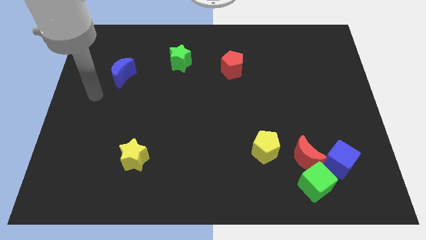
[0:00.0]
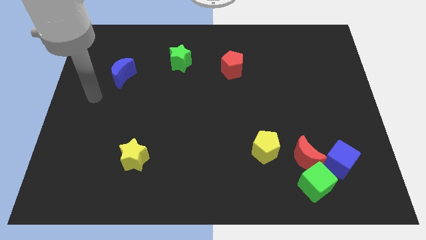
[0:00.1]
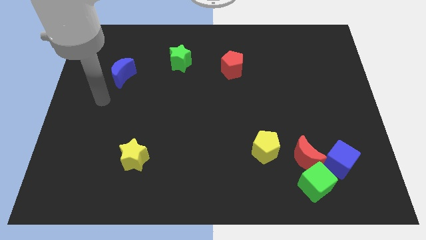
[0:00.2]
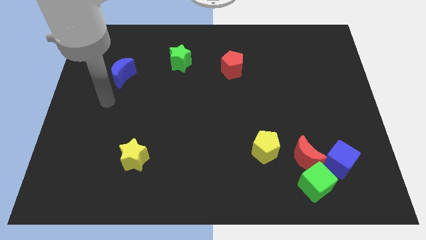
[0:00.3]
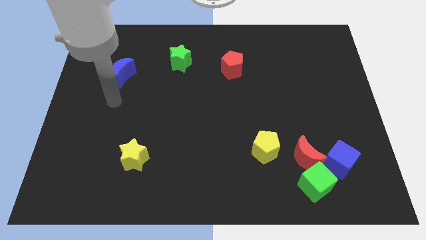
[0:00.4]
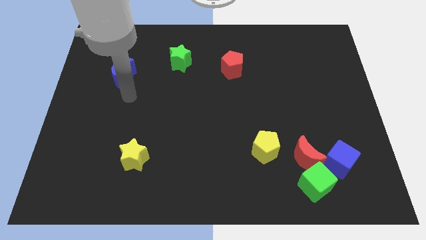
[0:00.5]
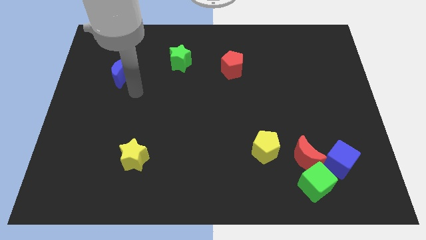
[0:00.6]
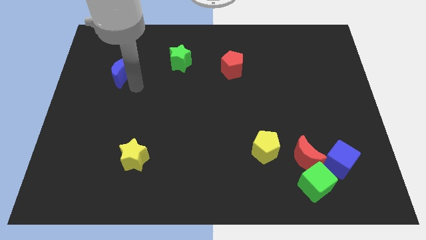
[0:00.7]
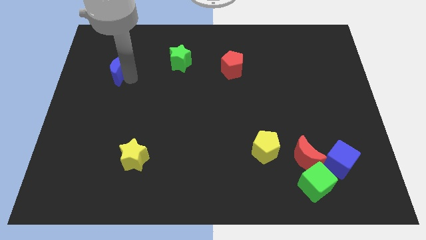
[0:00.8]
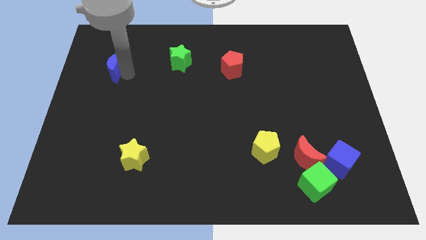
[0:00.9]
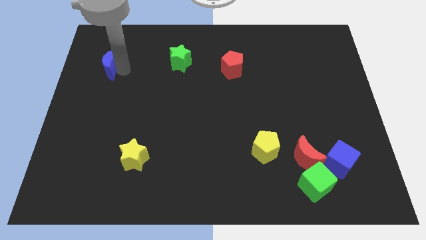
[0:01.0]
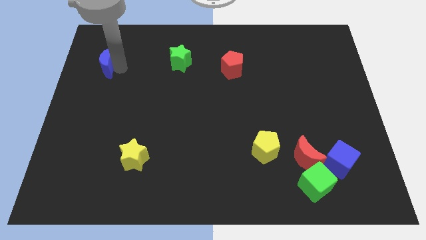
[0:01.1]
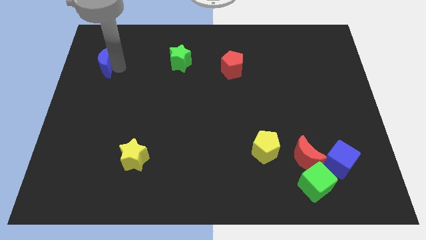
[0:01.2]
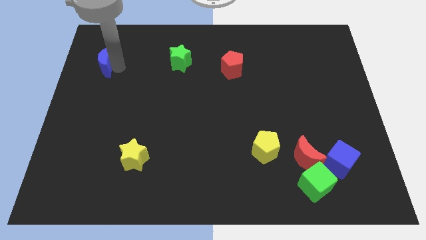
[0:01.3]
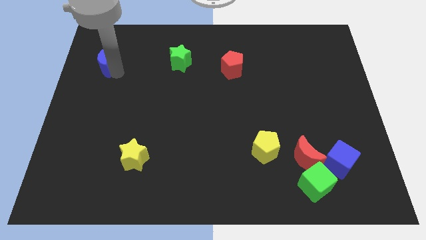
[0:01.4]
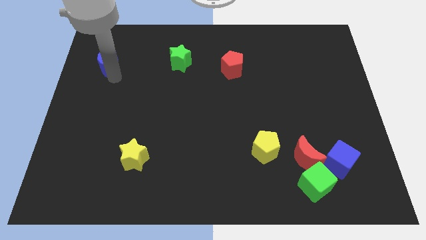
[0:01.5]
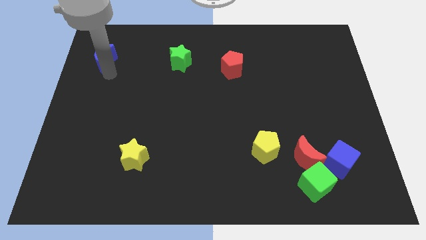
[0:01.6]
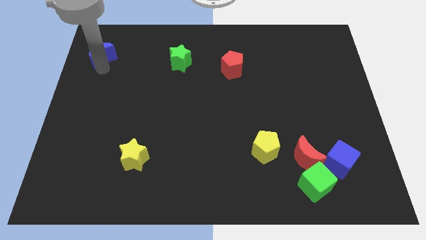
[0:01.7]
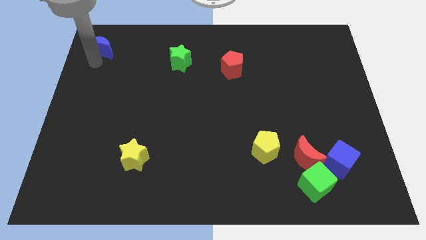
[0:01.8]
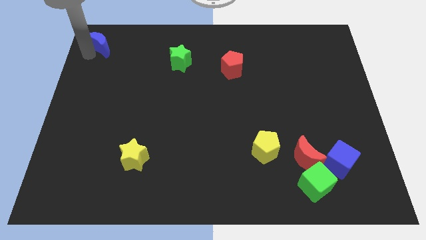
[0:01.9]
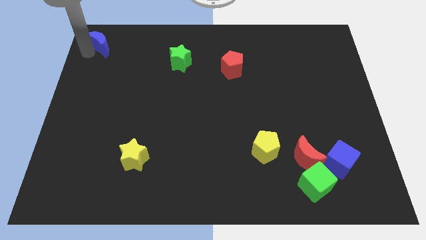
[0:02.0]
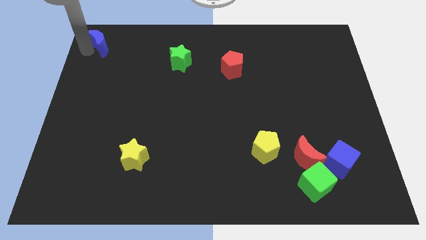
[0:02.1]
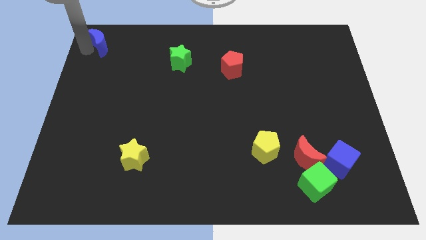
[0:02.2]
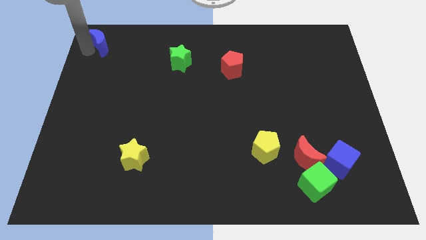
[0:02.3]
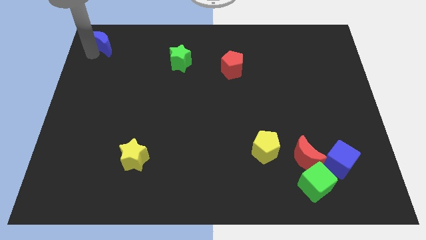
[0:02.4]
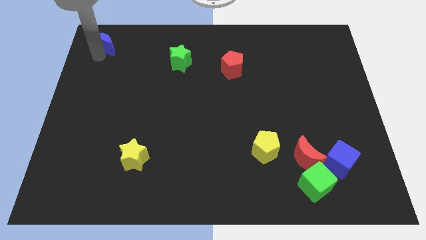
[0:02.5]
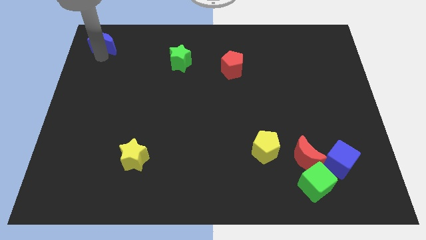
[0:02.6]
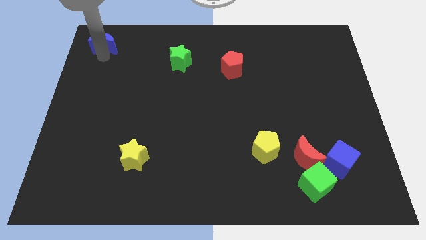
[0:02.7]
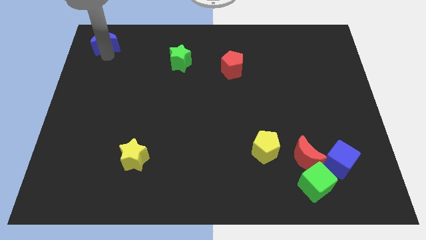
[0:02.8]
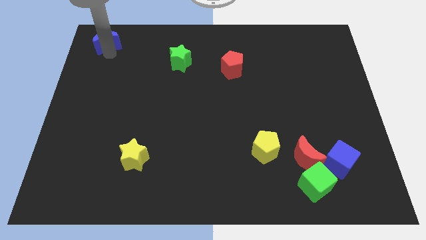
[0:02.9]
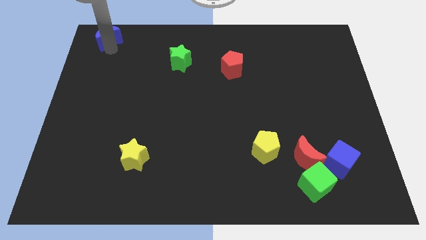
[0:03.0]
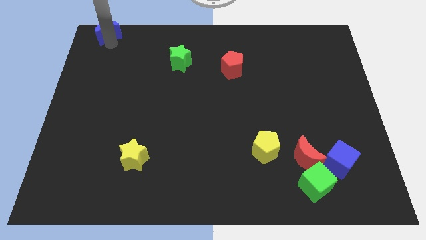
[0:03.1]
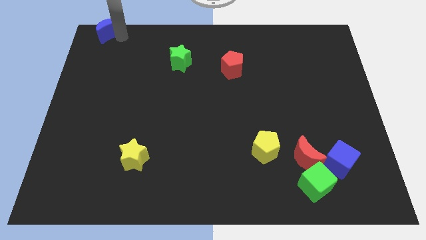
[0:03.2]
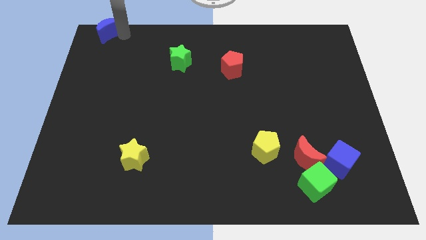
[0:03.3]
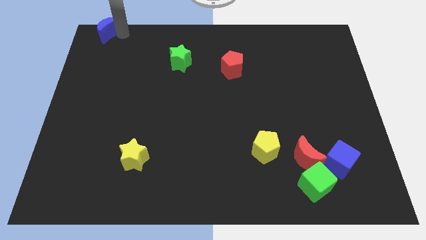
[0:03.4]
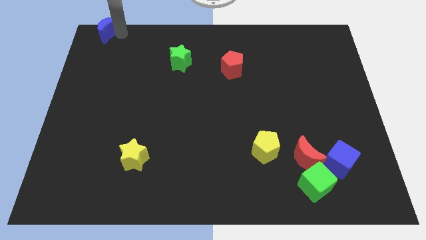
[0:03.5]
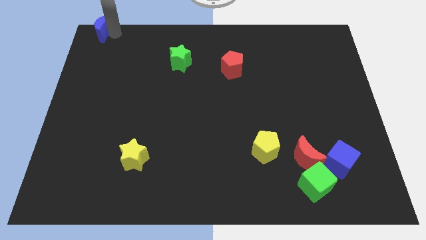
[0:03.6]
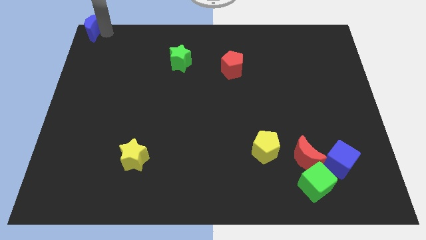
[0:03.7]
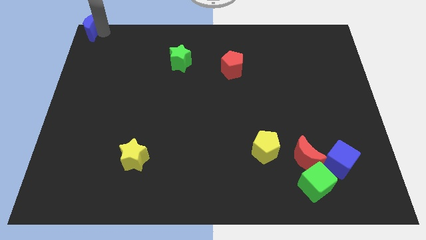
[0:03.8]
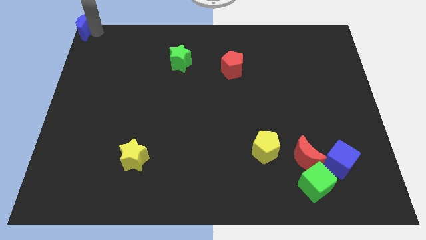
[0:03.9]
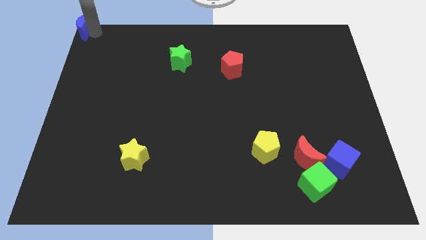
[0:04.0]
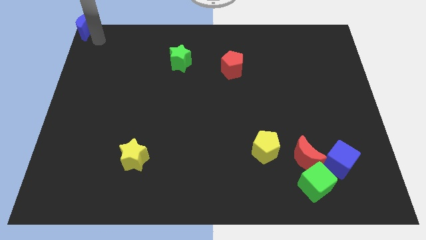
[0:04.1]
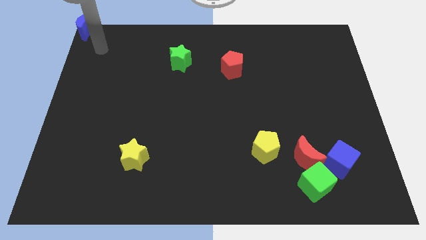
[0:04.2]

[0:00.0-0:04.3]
move the blue crescent to the top left corner of the board

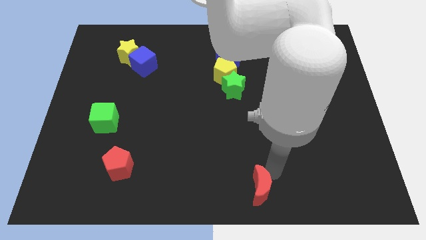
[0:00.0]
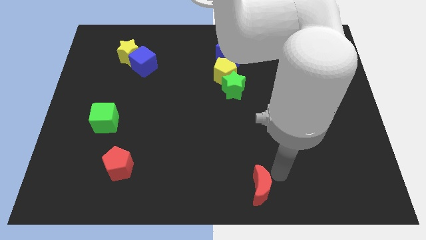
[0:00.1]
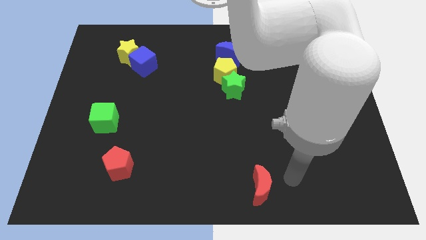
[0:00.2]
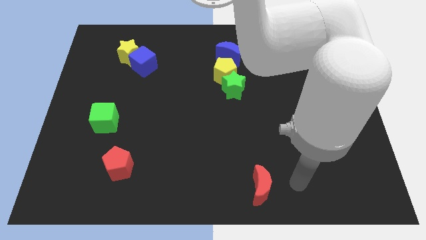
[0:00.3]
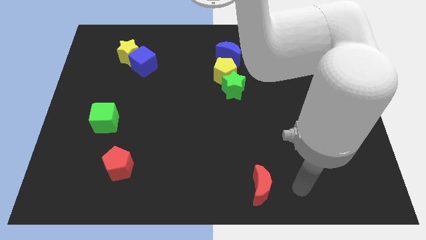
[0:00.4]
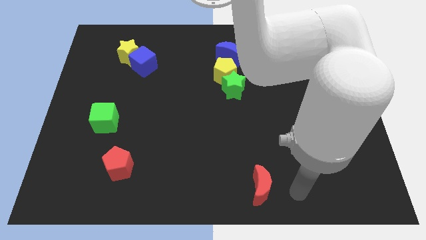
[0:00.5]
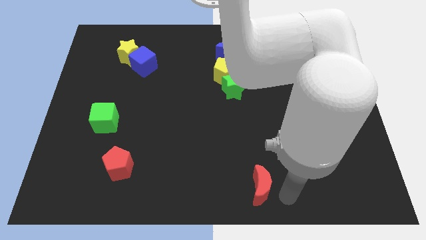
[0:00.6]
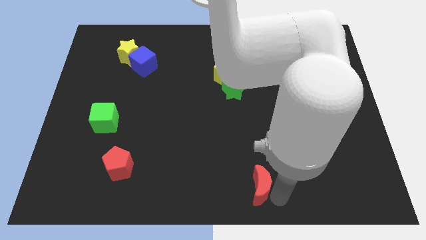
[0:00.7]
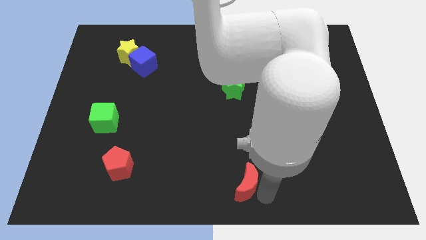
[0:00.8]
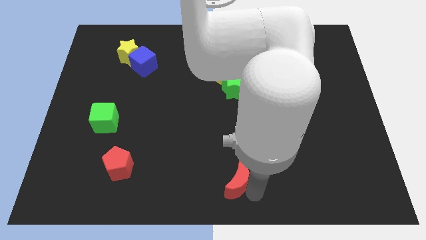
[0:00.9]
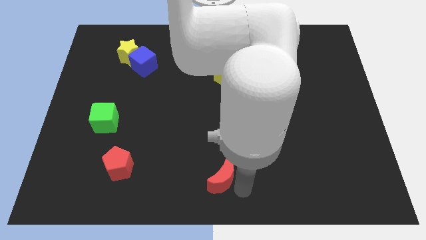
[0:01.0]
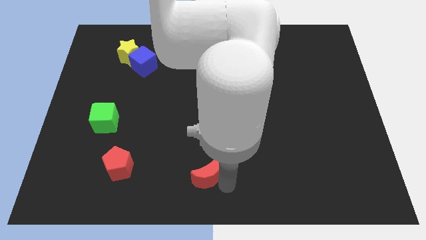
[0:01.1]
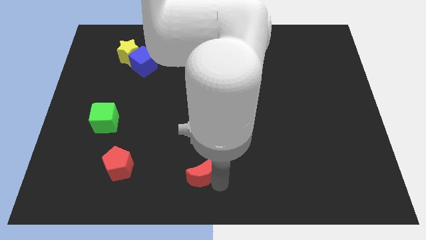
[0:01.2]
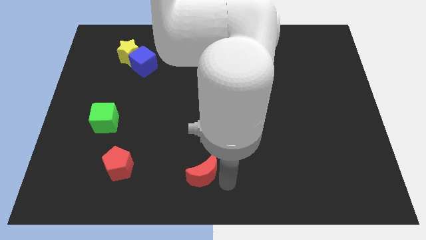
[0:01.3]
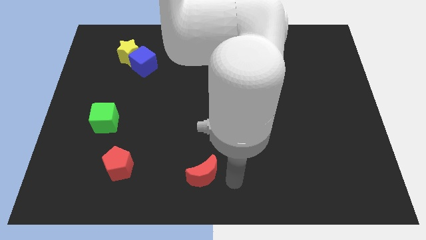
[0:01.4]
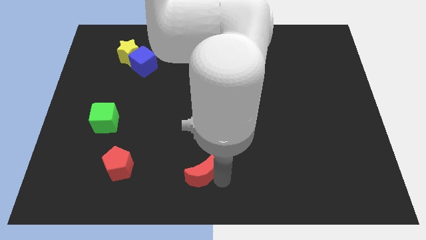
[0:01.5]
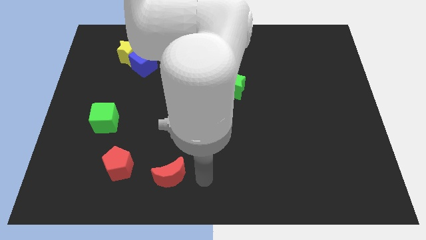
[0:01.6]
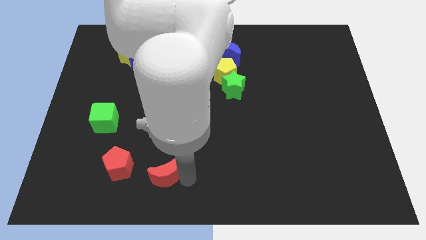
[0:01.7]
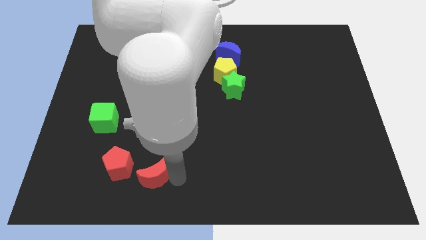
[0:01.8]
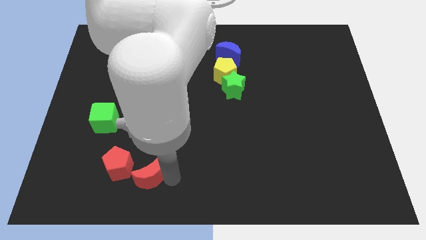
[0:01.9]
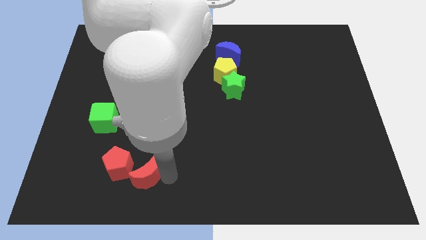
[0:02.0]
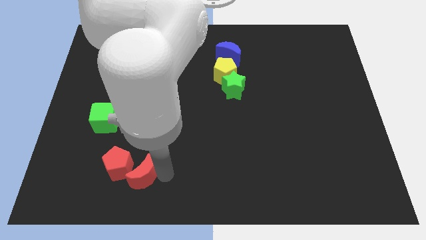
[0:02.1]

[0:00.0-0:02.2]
move the red moon right beside the red pentagon

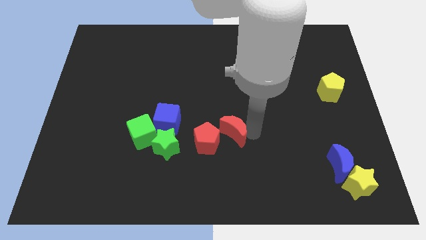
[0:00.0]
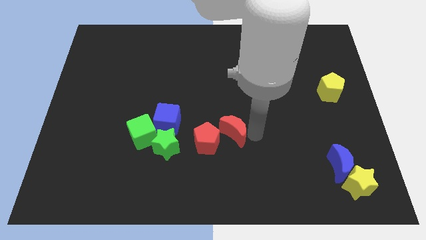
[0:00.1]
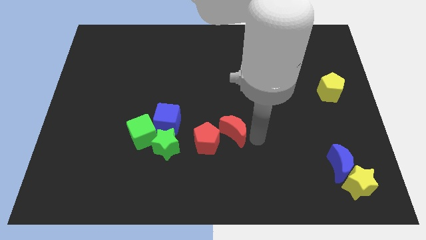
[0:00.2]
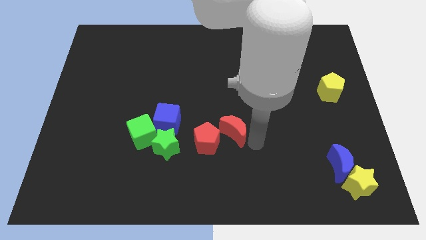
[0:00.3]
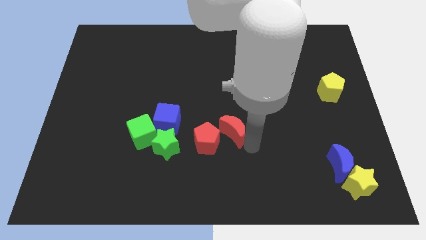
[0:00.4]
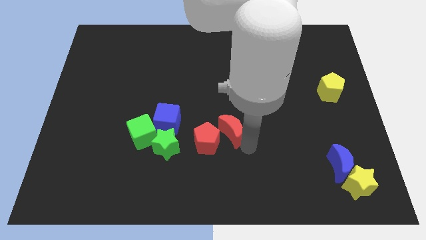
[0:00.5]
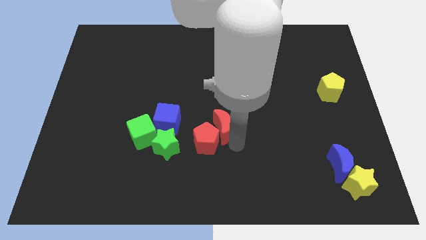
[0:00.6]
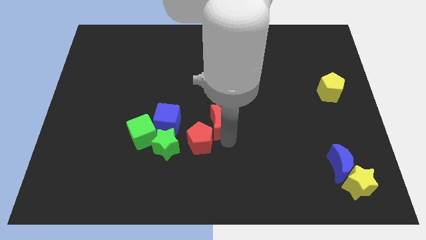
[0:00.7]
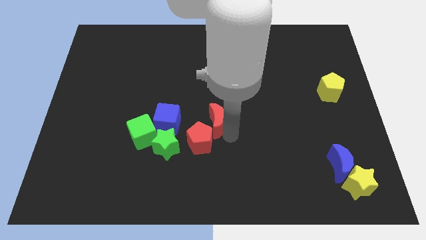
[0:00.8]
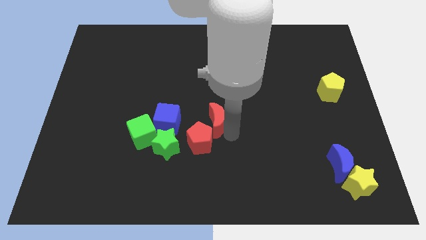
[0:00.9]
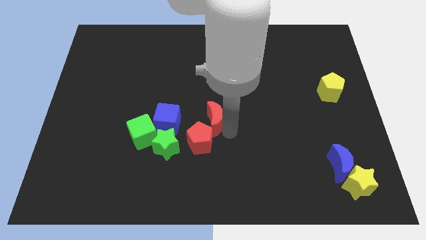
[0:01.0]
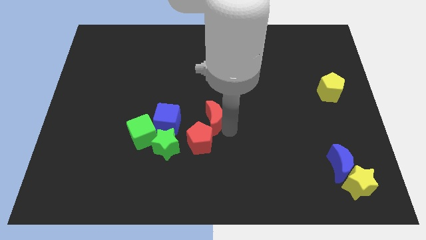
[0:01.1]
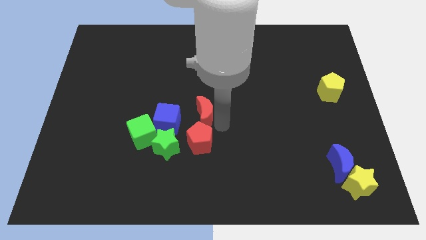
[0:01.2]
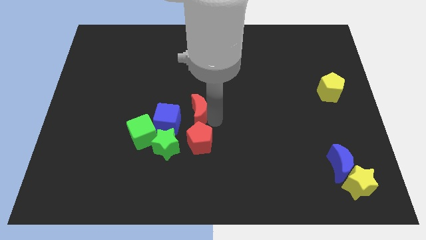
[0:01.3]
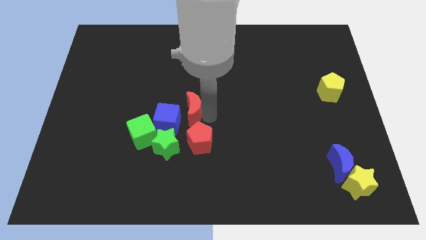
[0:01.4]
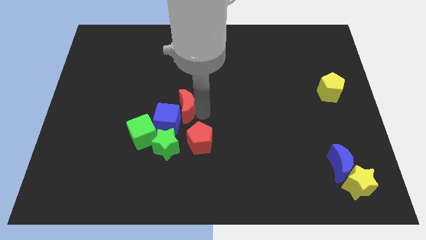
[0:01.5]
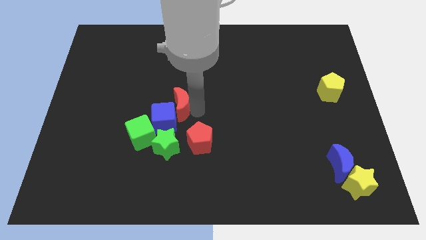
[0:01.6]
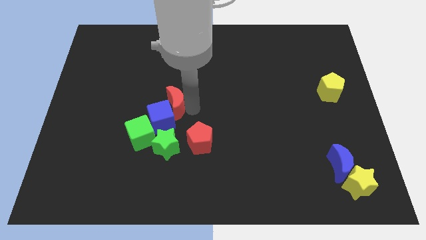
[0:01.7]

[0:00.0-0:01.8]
place the red moon at the top of the red pentagon

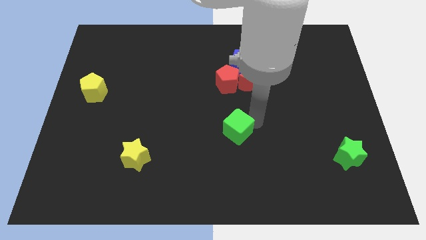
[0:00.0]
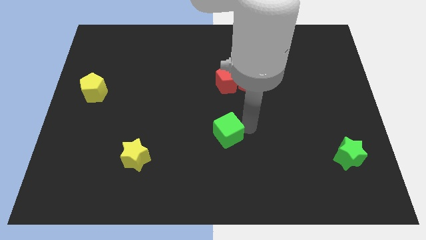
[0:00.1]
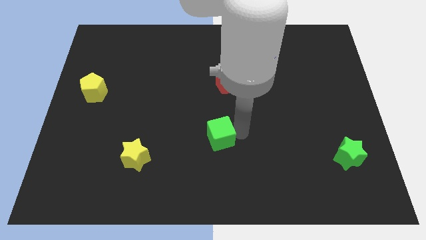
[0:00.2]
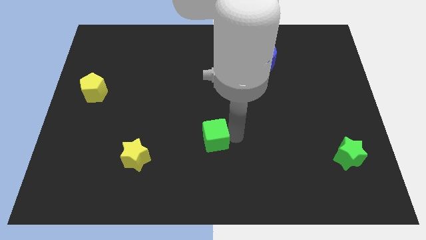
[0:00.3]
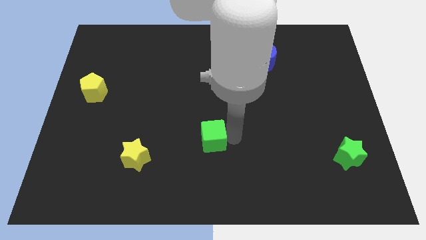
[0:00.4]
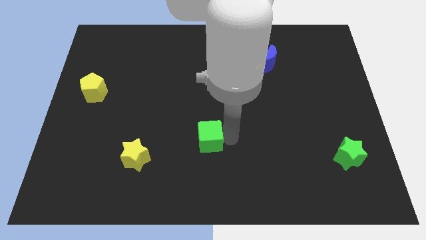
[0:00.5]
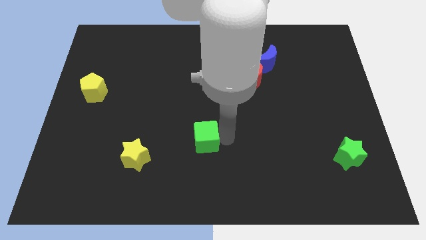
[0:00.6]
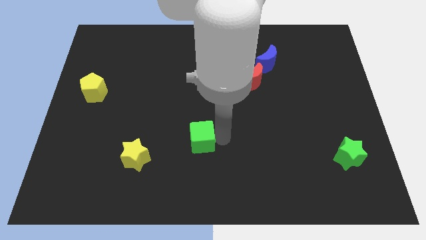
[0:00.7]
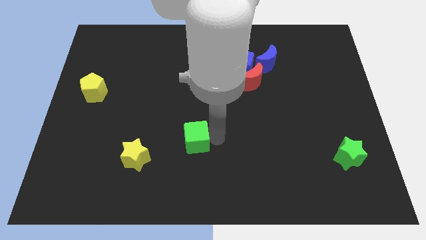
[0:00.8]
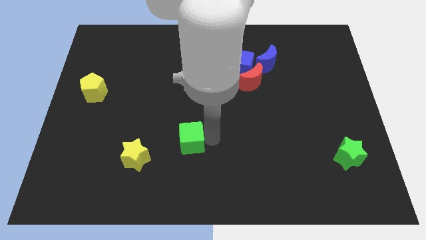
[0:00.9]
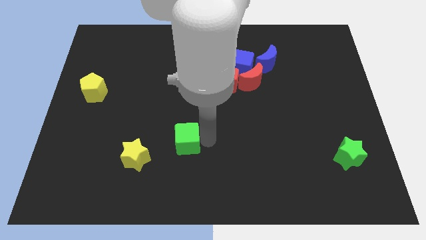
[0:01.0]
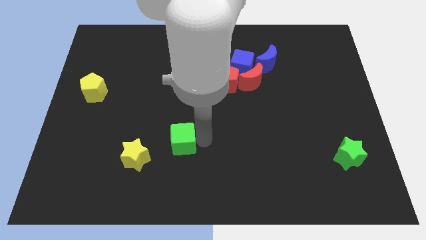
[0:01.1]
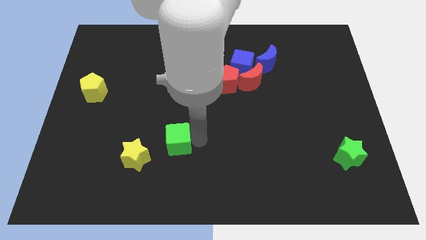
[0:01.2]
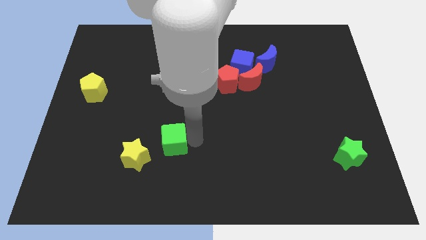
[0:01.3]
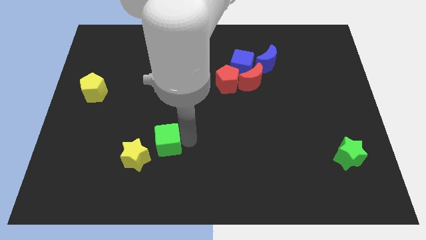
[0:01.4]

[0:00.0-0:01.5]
move green cube close to the yellow star
